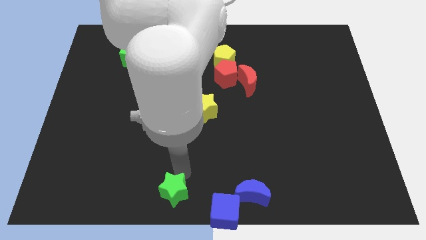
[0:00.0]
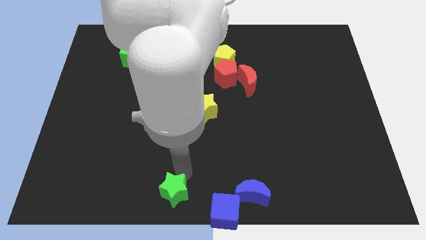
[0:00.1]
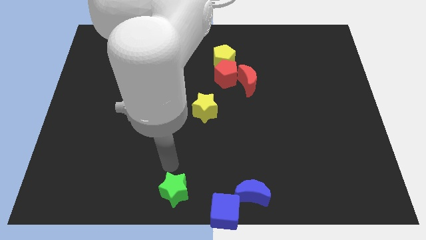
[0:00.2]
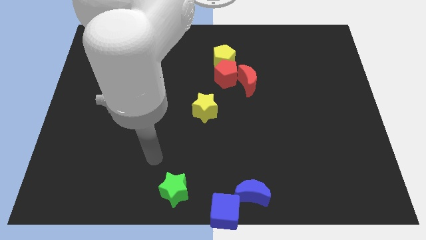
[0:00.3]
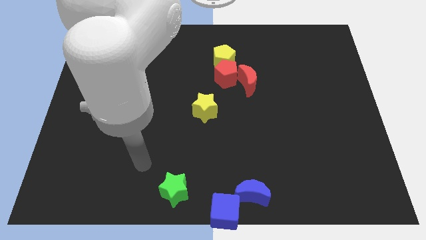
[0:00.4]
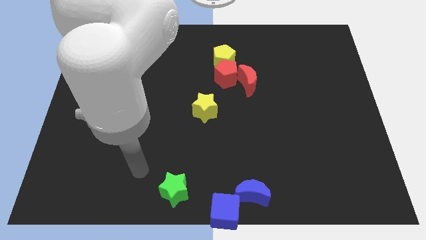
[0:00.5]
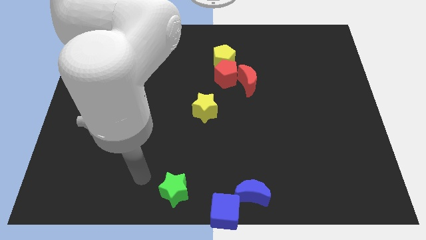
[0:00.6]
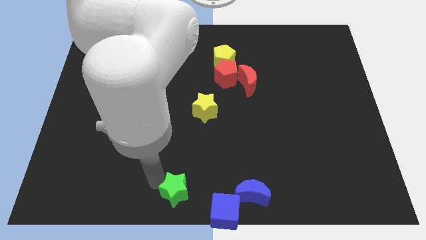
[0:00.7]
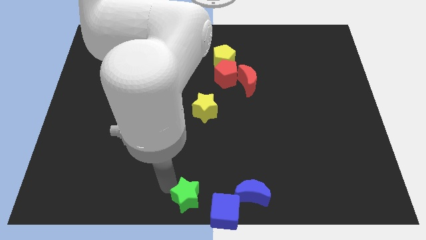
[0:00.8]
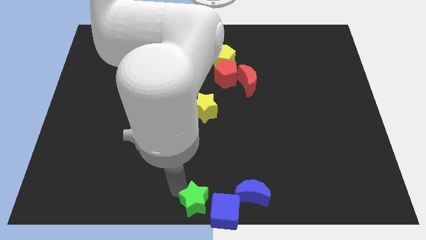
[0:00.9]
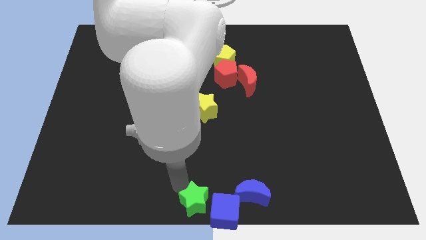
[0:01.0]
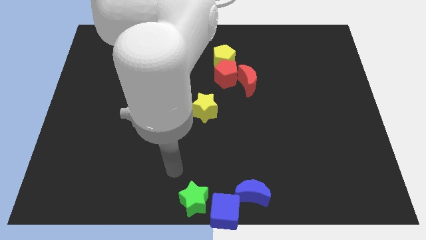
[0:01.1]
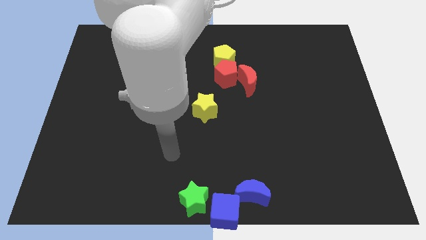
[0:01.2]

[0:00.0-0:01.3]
push green star beside blue cube

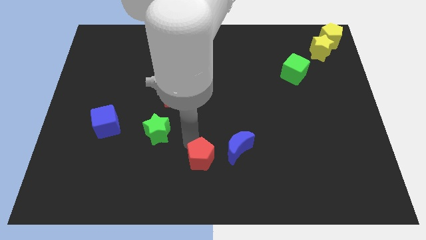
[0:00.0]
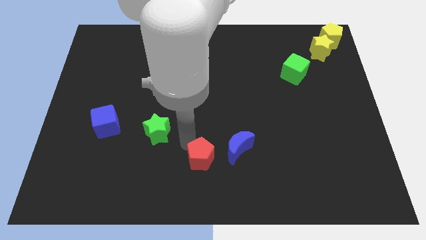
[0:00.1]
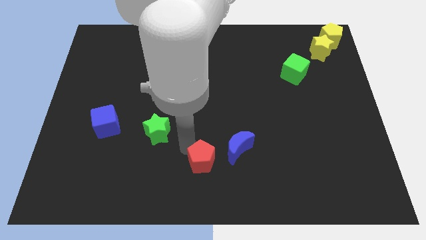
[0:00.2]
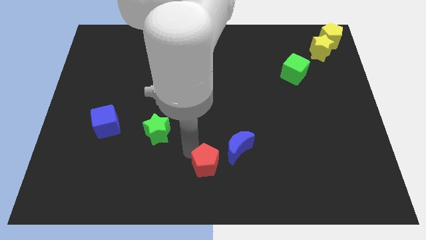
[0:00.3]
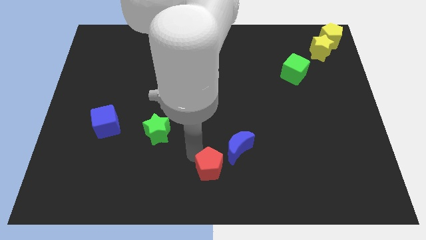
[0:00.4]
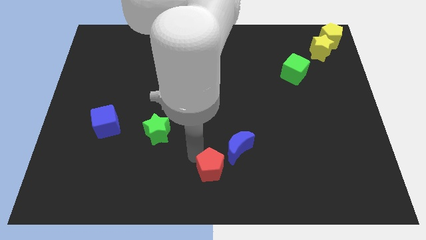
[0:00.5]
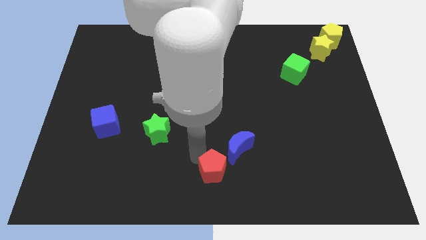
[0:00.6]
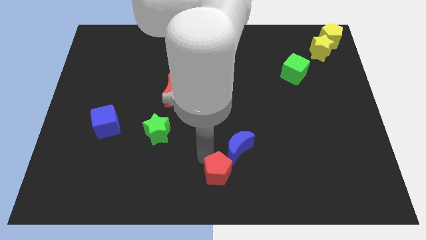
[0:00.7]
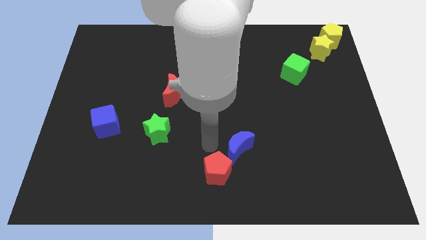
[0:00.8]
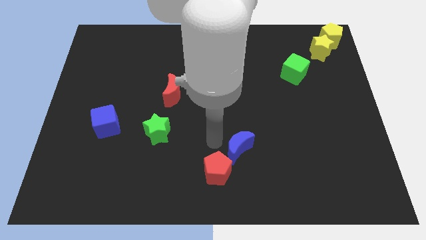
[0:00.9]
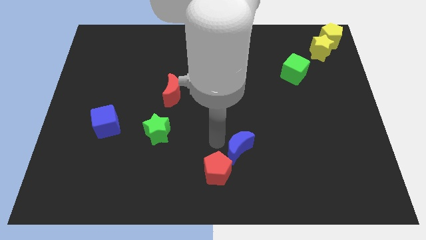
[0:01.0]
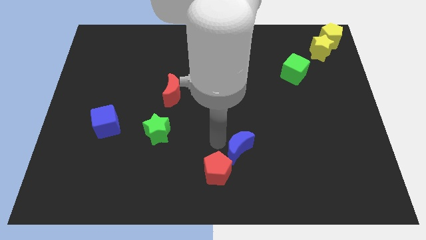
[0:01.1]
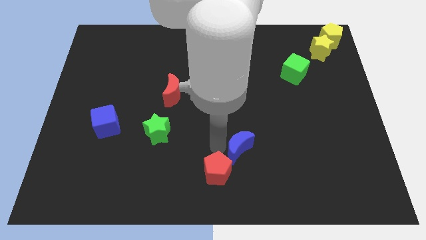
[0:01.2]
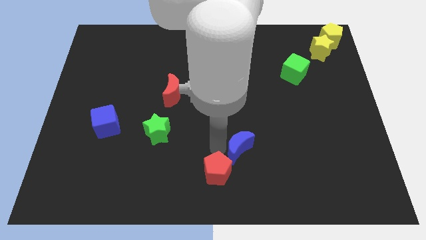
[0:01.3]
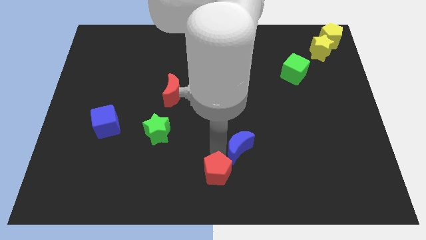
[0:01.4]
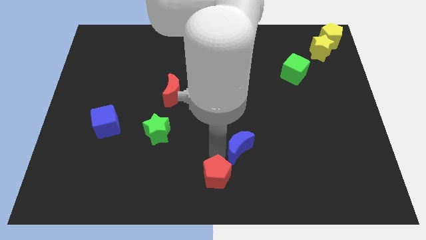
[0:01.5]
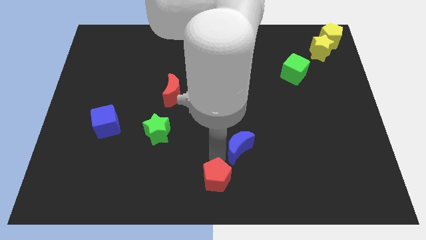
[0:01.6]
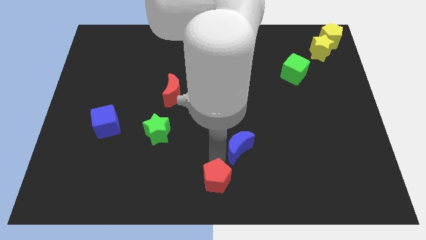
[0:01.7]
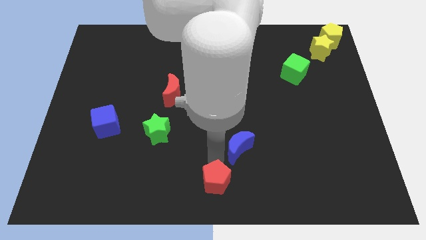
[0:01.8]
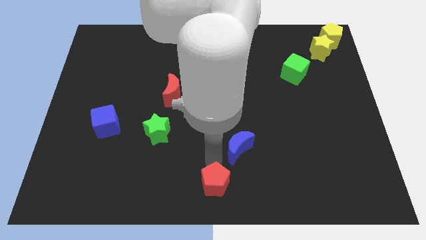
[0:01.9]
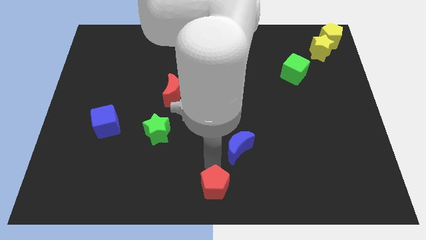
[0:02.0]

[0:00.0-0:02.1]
place the red pentagon diagonally bottom left to the blue moon

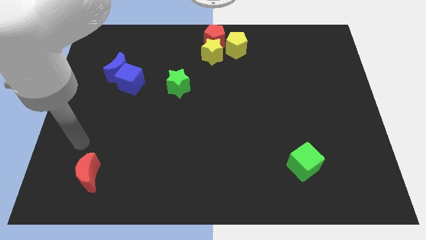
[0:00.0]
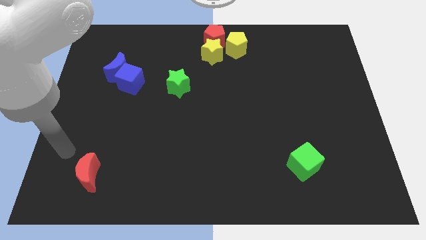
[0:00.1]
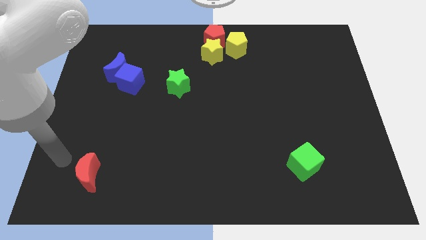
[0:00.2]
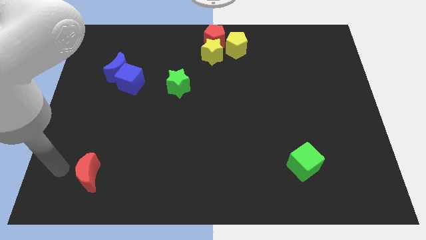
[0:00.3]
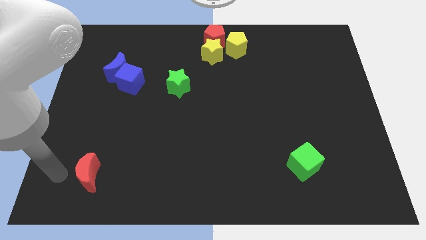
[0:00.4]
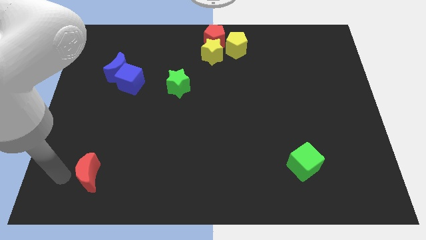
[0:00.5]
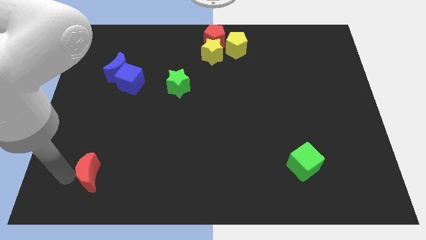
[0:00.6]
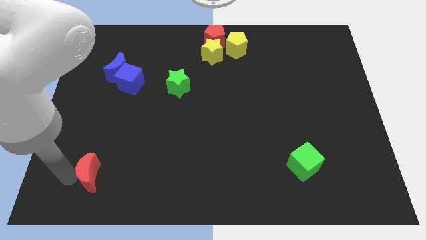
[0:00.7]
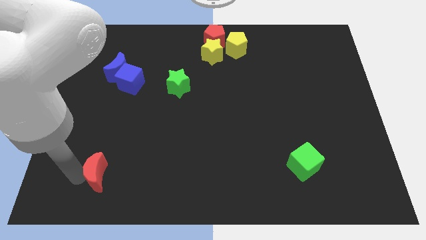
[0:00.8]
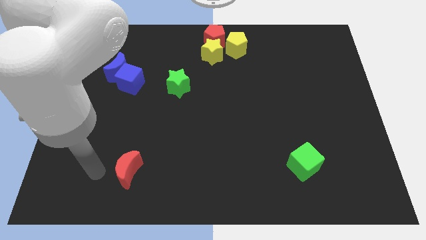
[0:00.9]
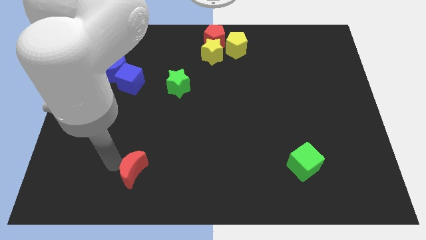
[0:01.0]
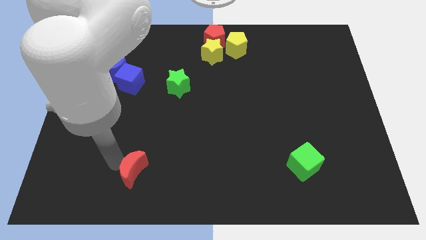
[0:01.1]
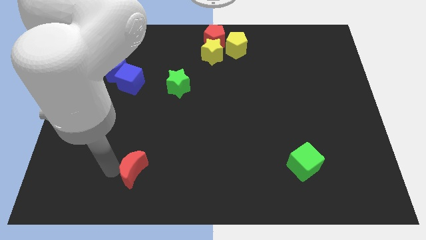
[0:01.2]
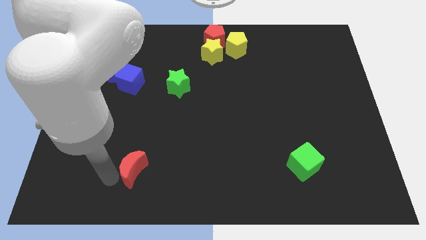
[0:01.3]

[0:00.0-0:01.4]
slide the red crescent towards the bottom center of the board

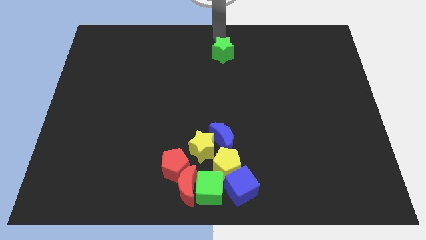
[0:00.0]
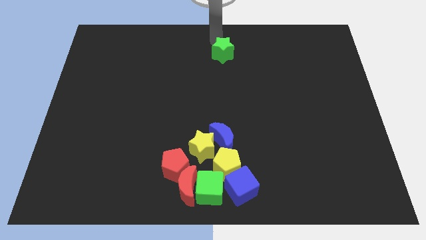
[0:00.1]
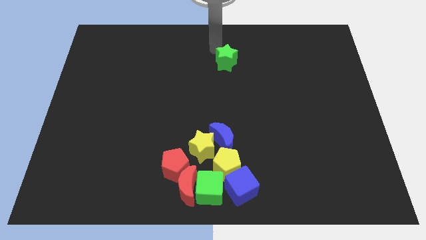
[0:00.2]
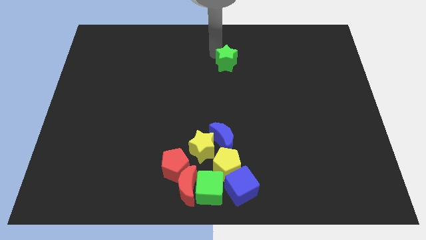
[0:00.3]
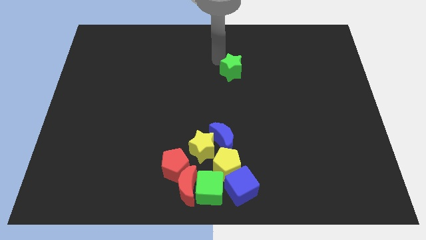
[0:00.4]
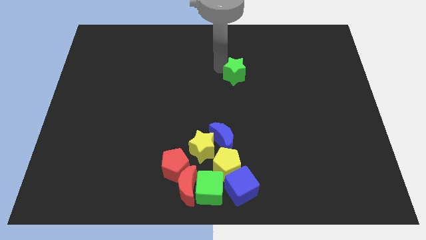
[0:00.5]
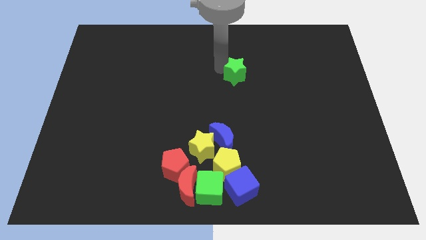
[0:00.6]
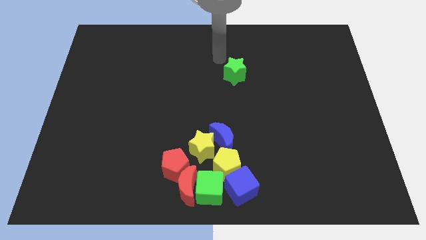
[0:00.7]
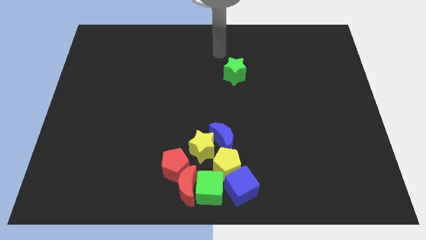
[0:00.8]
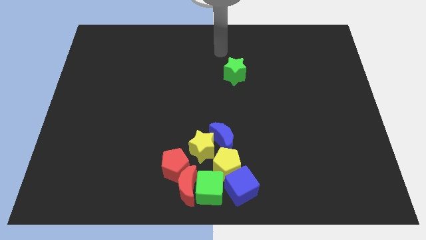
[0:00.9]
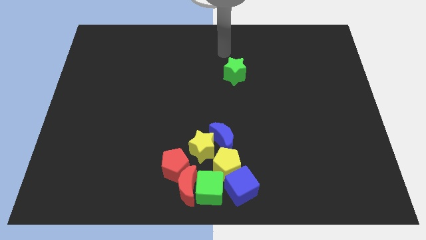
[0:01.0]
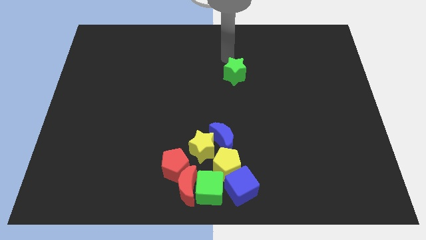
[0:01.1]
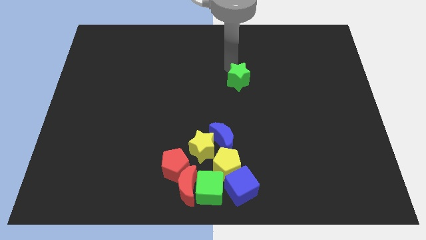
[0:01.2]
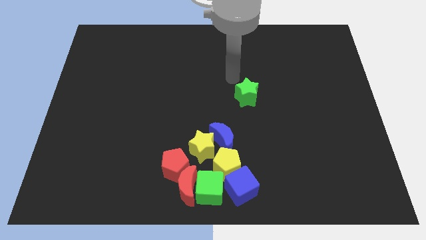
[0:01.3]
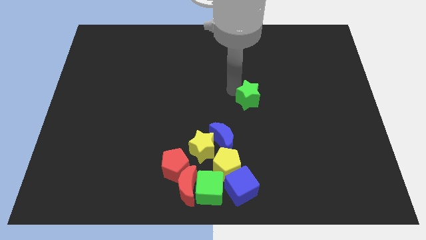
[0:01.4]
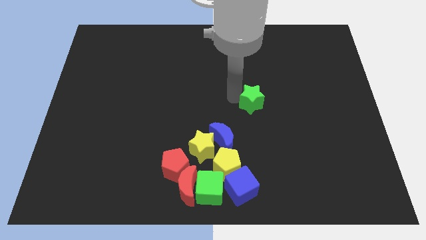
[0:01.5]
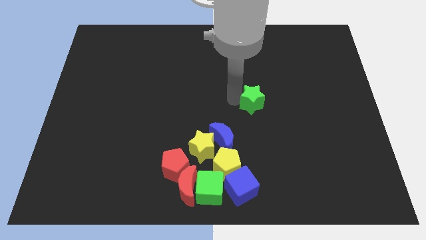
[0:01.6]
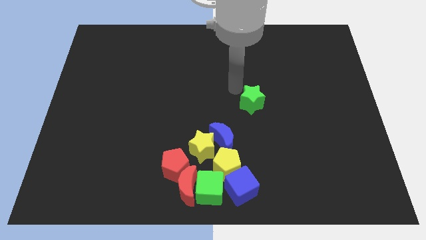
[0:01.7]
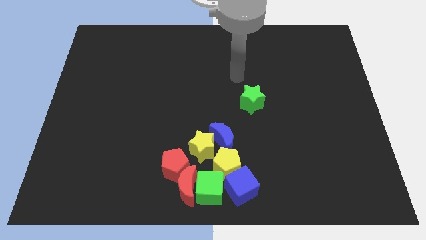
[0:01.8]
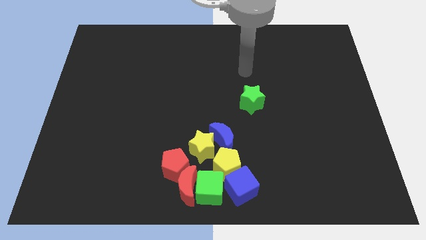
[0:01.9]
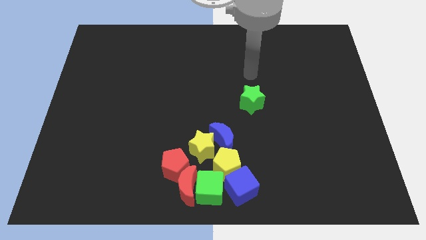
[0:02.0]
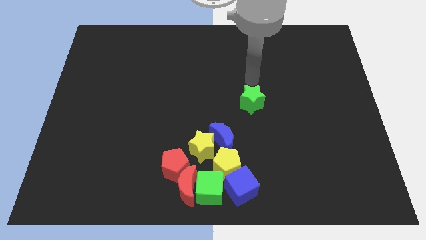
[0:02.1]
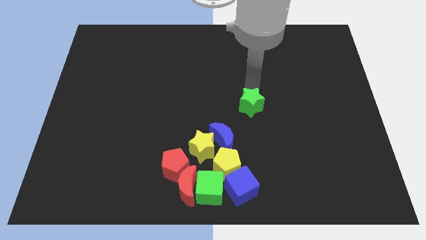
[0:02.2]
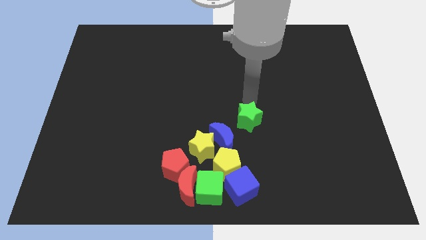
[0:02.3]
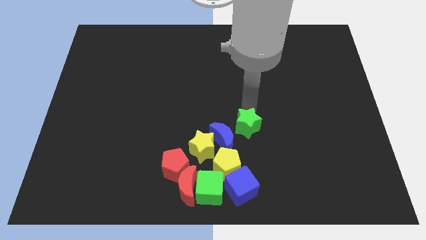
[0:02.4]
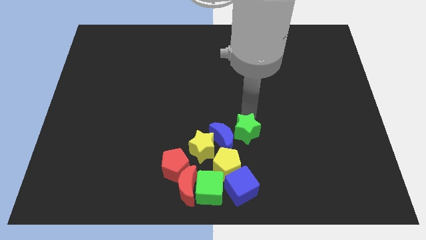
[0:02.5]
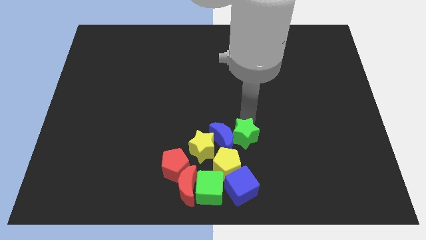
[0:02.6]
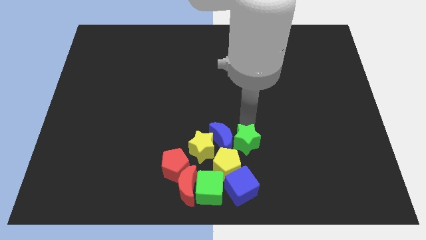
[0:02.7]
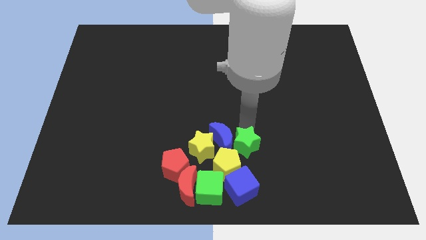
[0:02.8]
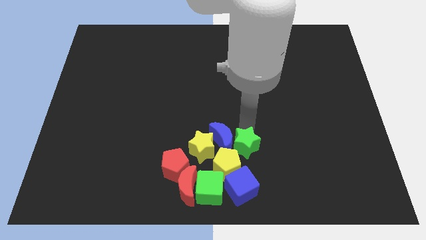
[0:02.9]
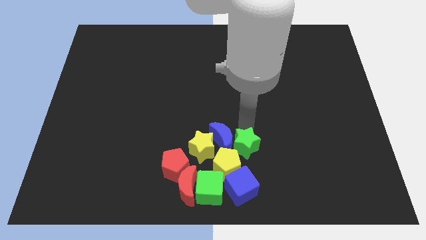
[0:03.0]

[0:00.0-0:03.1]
place green star to the right of blue moon

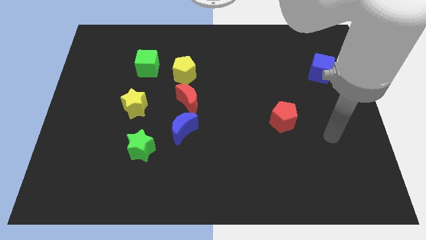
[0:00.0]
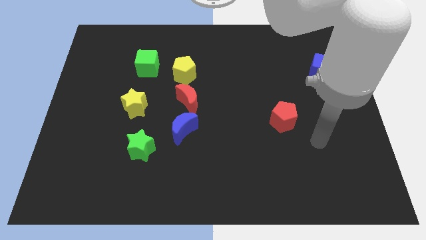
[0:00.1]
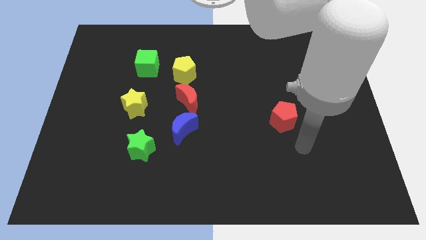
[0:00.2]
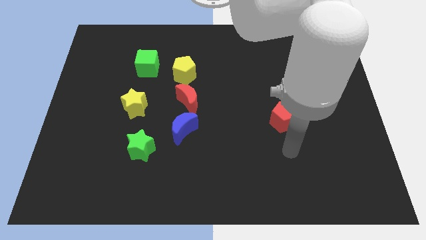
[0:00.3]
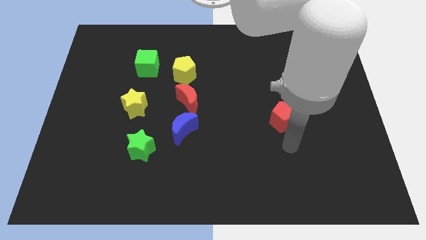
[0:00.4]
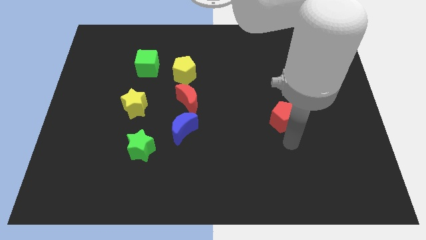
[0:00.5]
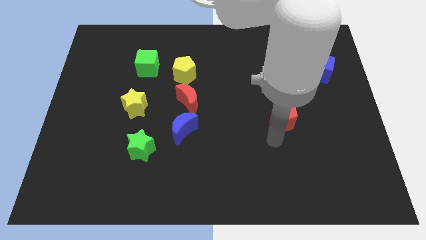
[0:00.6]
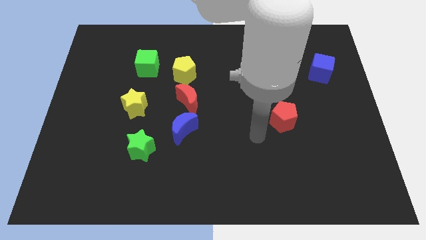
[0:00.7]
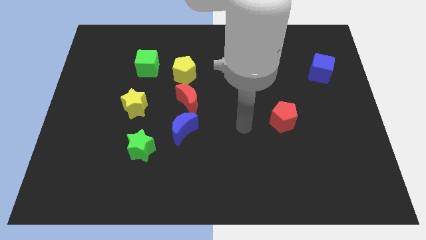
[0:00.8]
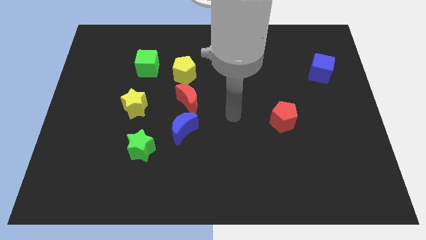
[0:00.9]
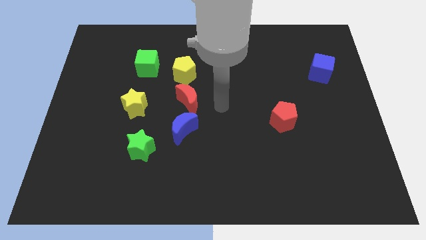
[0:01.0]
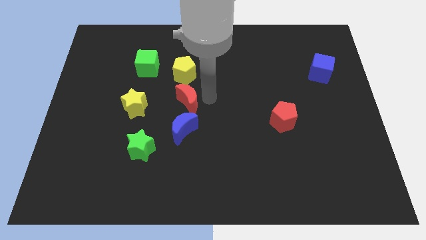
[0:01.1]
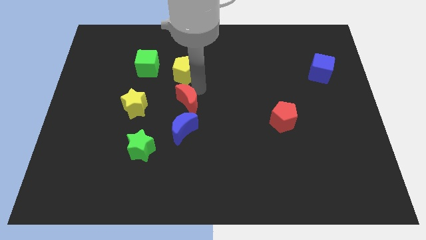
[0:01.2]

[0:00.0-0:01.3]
move your hand towards the red crescent
